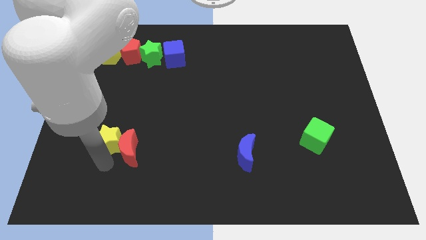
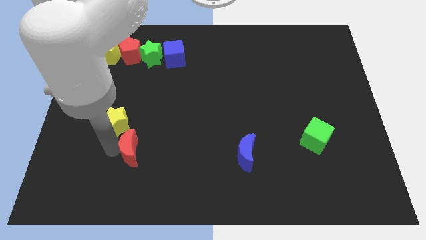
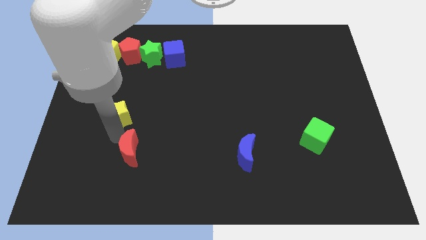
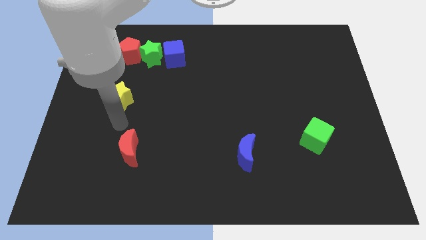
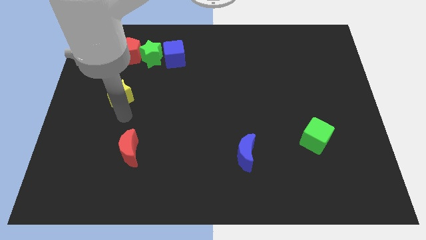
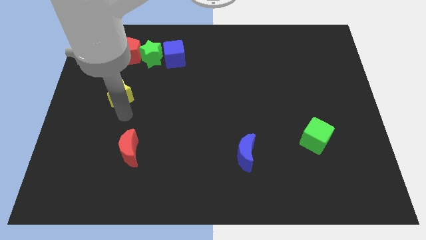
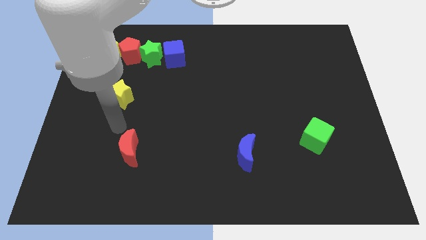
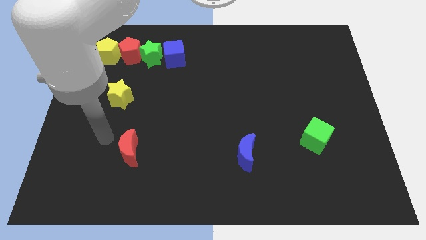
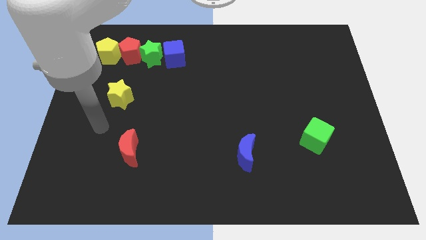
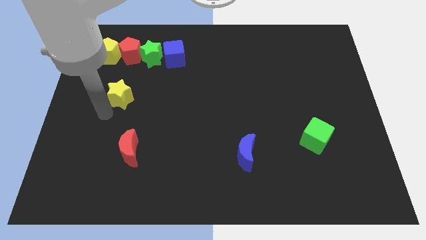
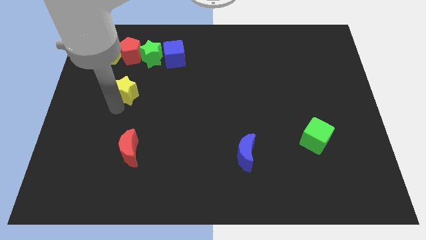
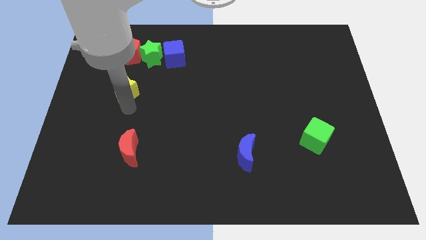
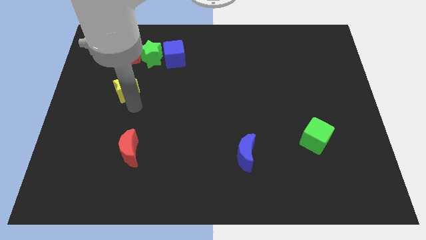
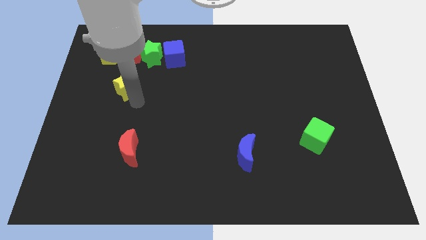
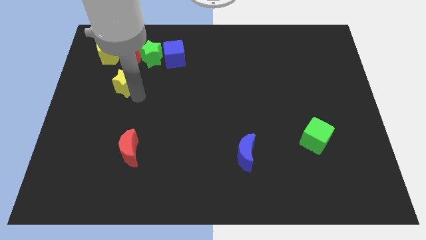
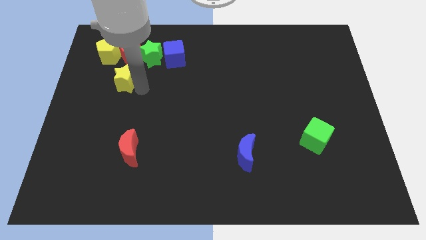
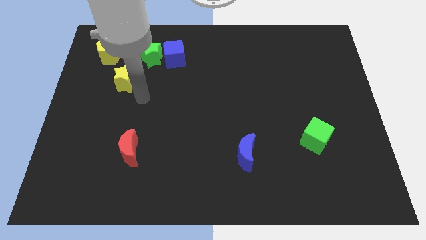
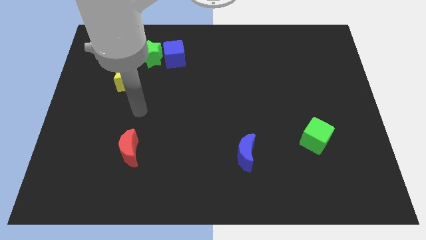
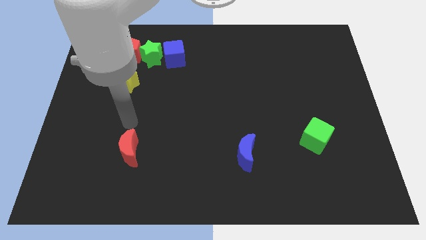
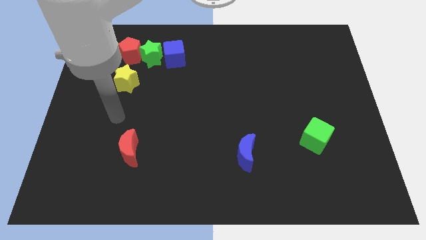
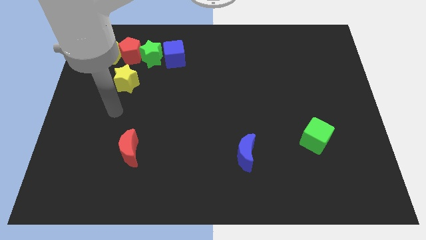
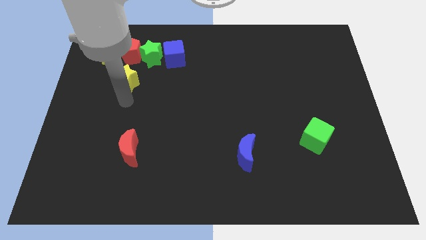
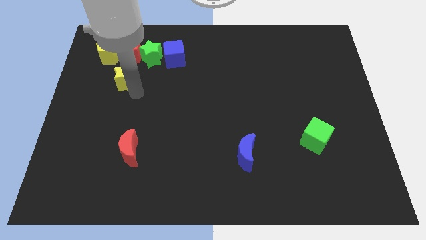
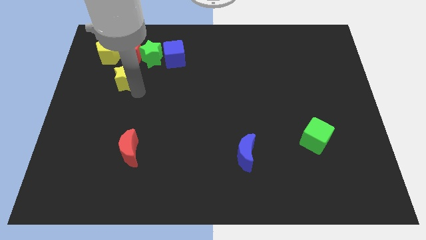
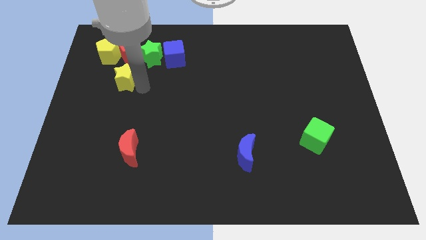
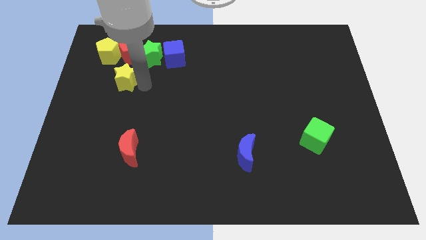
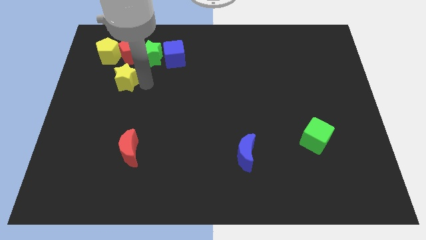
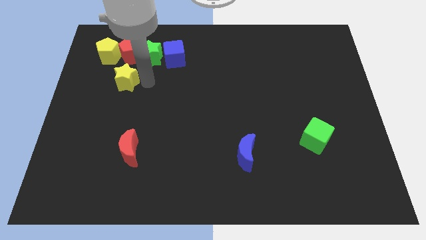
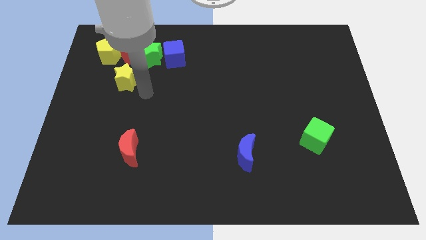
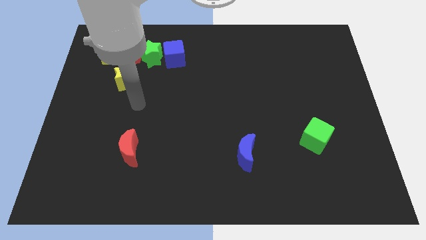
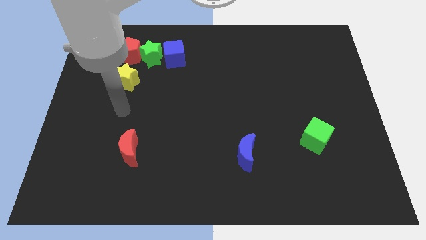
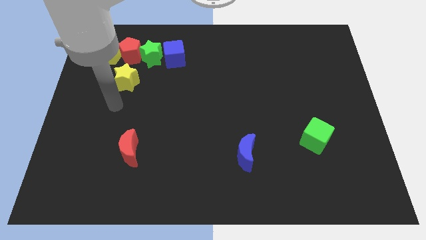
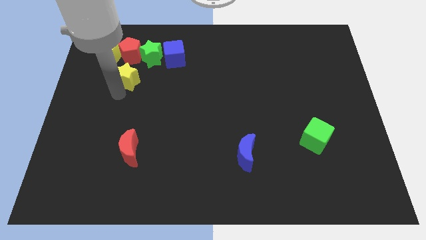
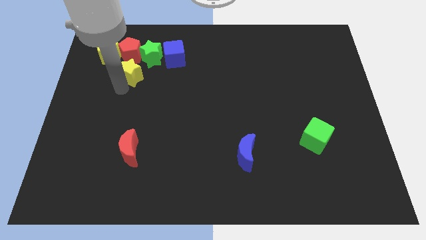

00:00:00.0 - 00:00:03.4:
move the yellow star to the bottom of the red pentagon

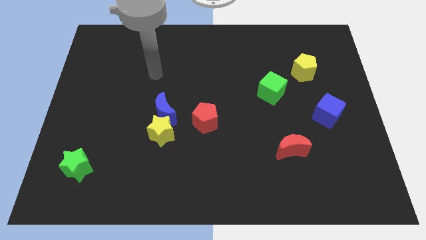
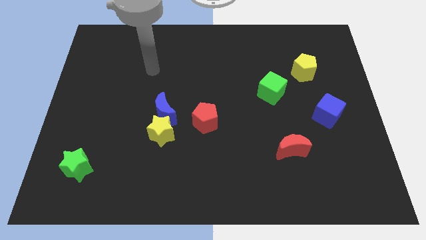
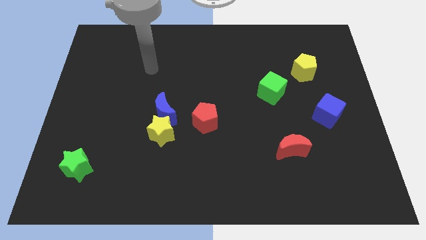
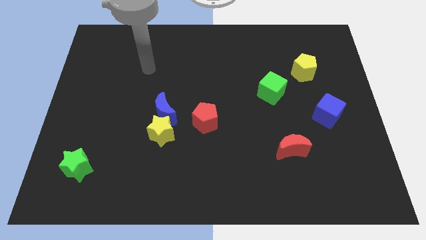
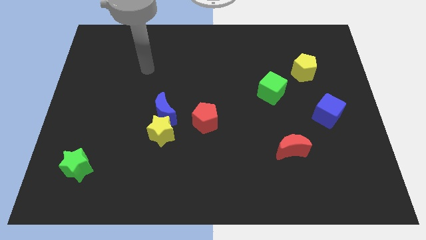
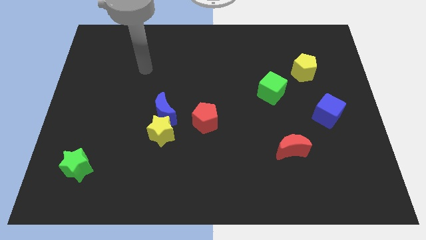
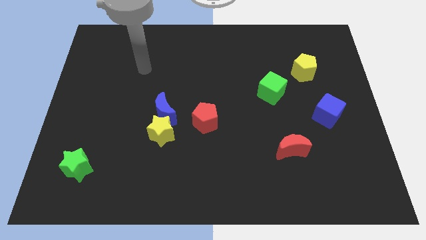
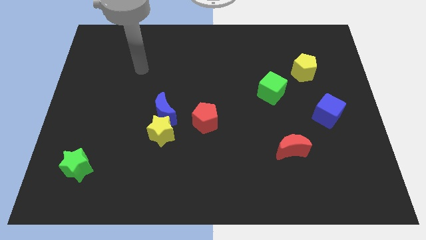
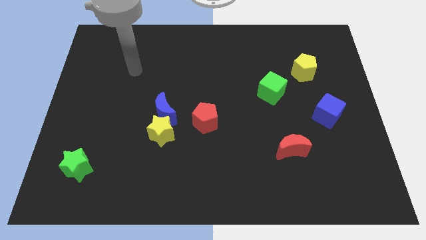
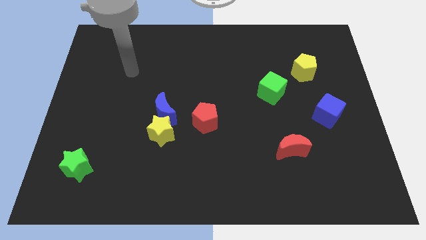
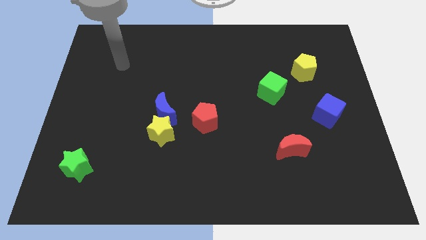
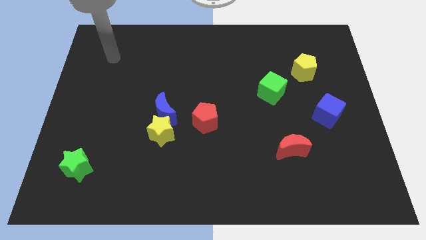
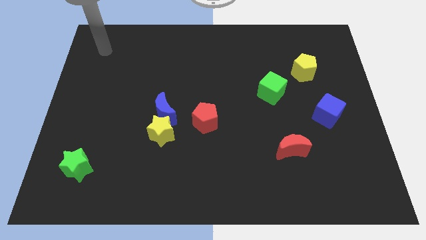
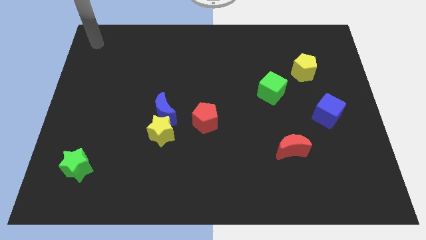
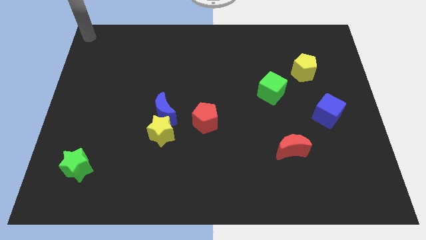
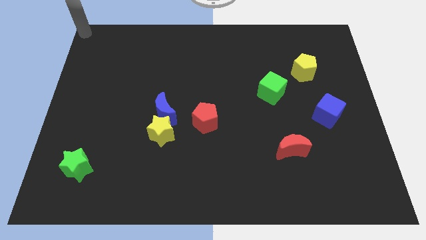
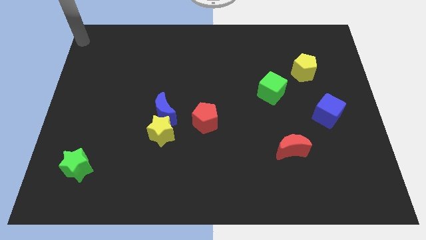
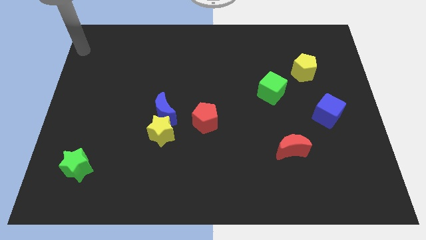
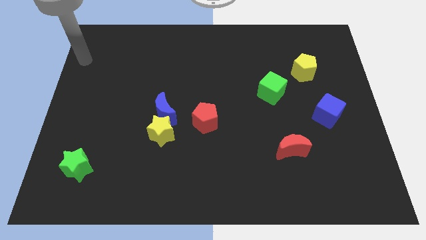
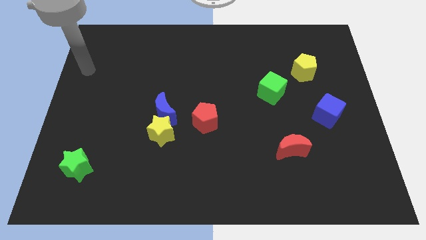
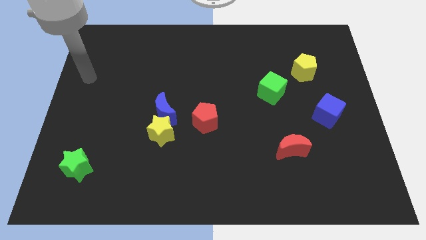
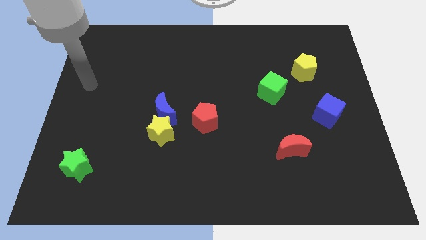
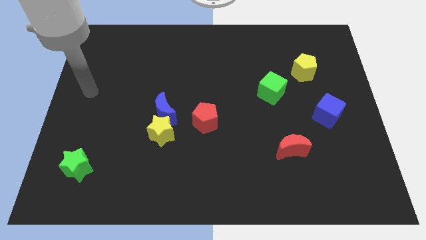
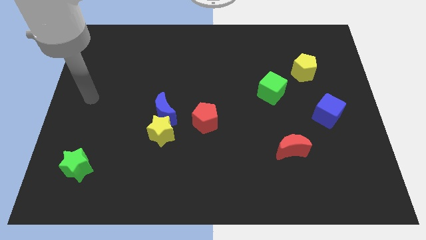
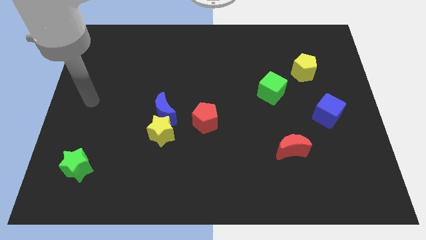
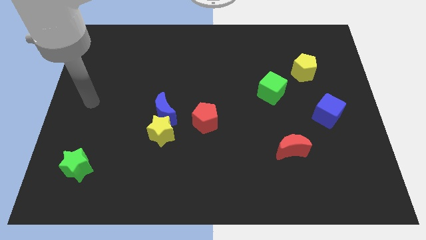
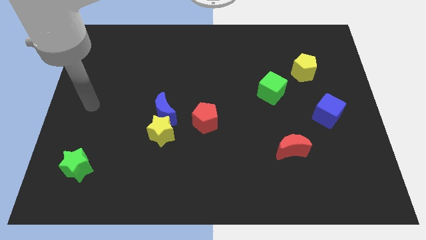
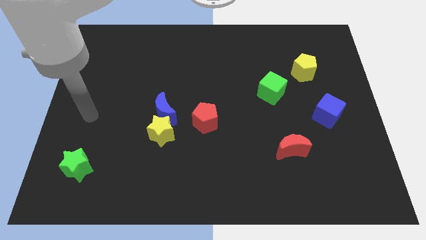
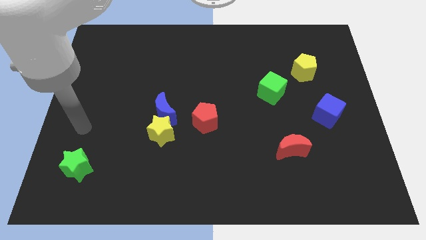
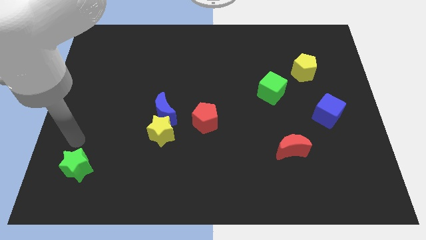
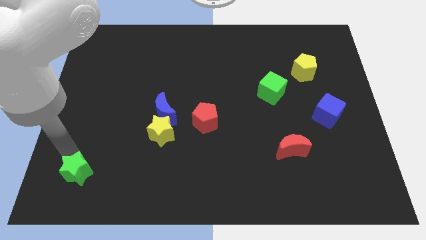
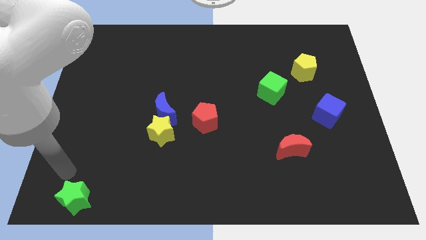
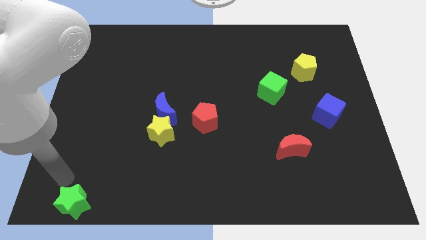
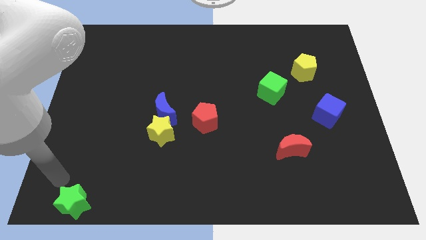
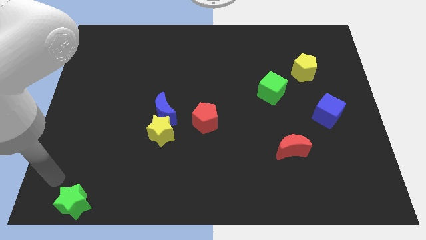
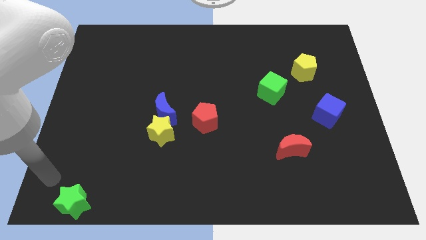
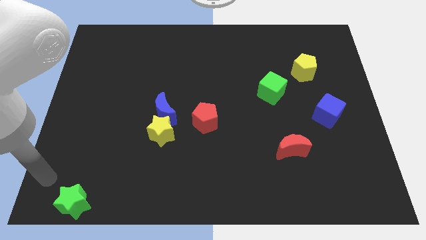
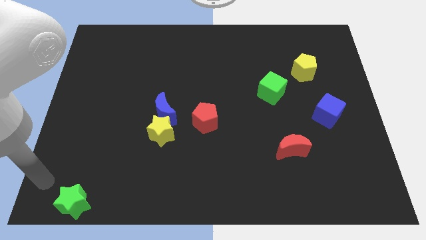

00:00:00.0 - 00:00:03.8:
go and push the green star to the bottom

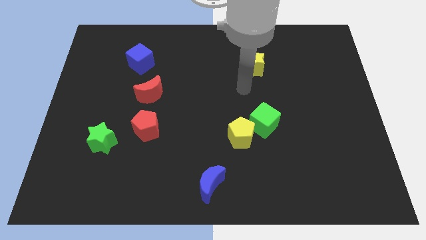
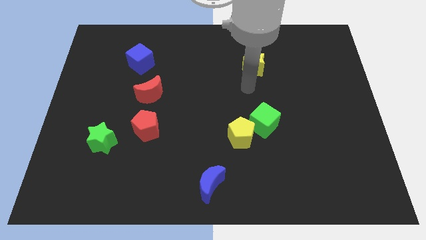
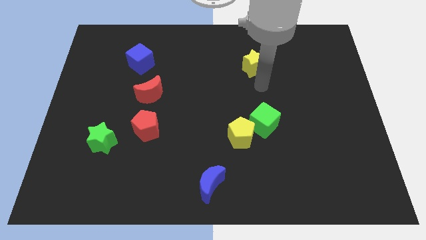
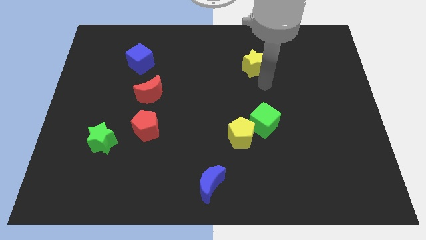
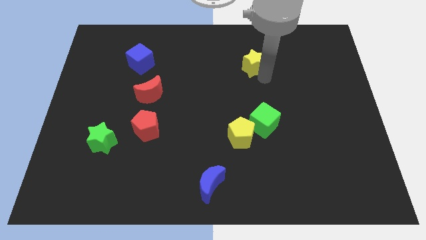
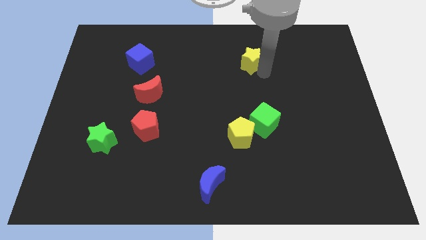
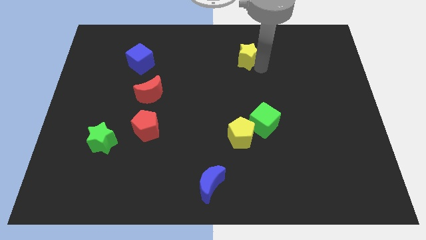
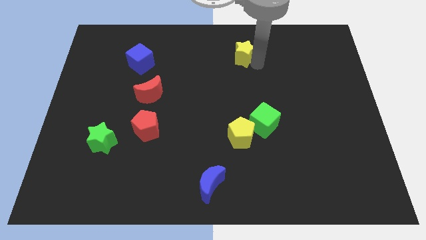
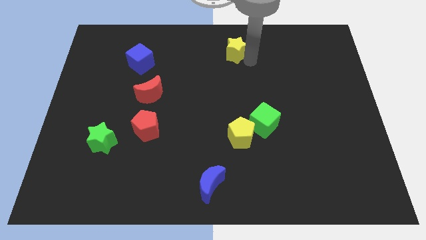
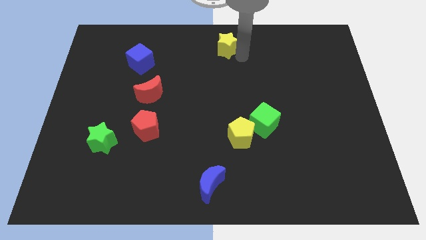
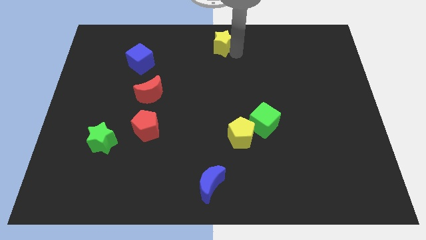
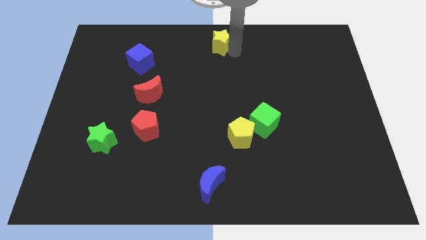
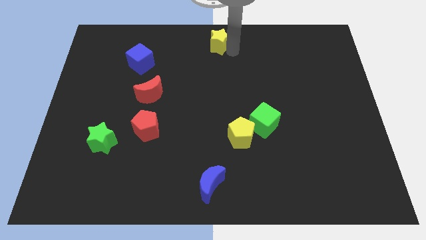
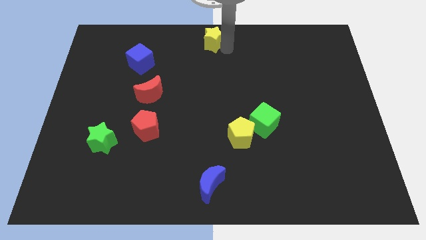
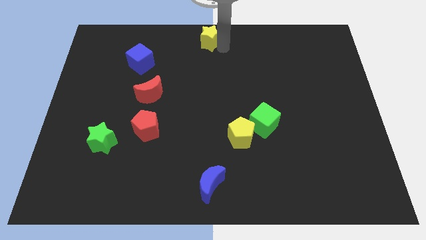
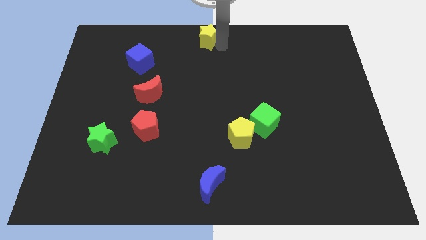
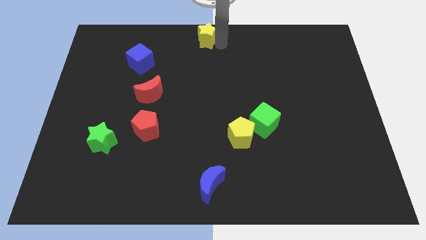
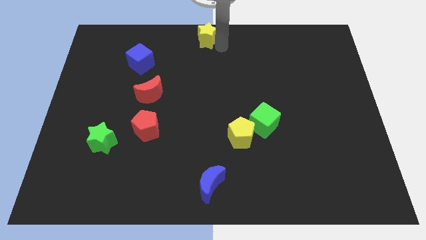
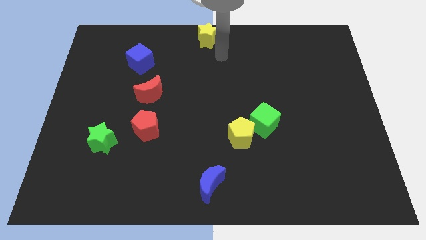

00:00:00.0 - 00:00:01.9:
push the yellow star to the top center of the board
